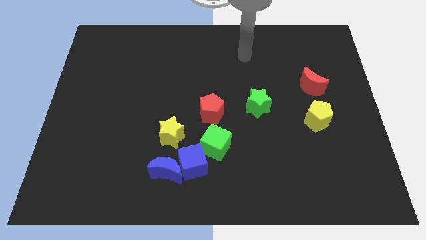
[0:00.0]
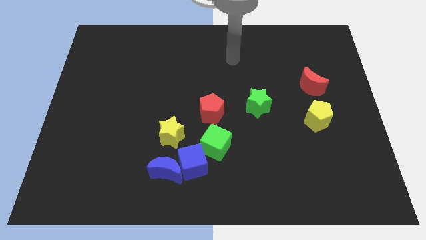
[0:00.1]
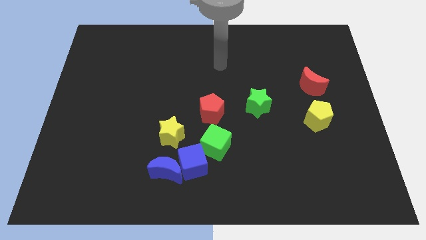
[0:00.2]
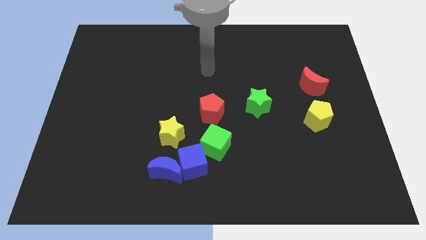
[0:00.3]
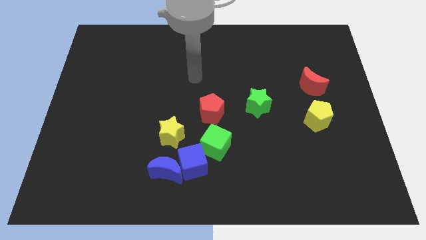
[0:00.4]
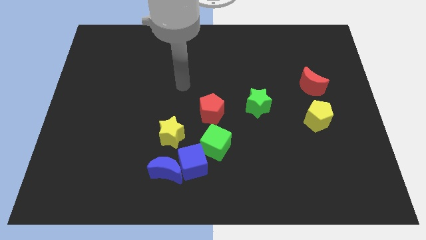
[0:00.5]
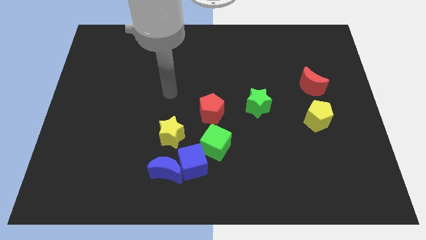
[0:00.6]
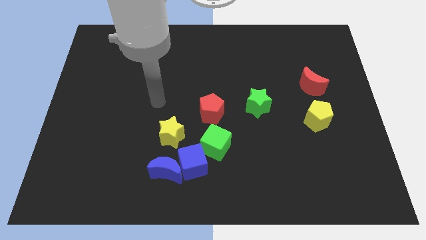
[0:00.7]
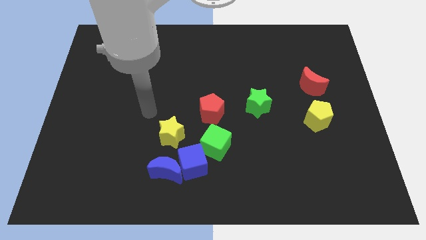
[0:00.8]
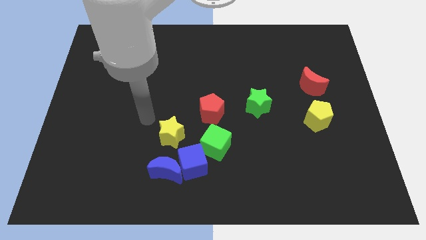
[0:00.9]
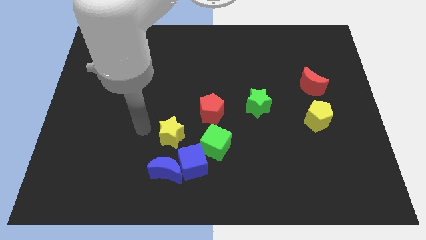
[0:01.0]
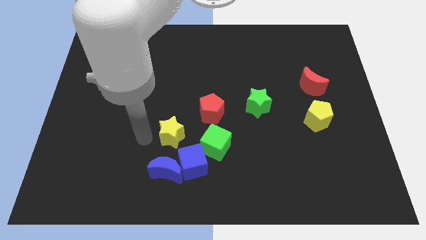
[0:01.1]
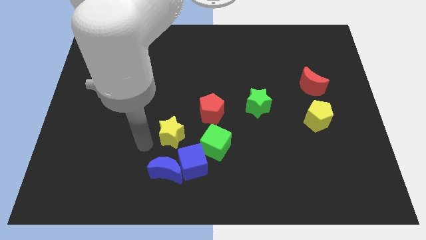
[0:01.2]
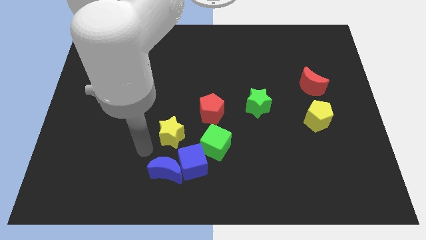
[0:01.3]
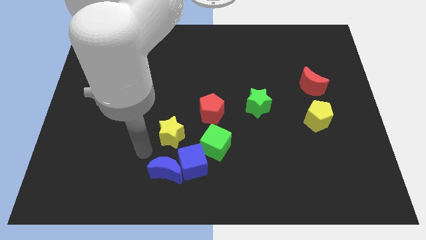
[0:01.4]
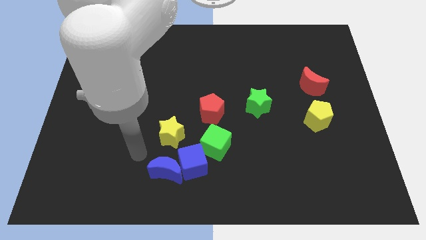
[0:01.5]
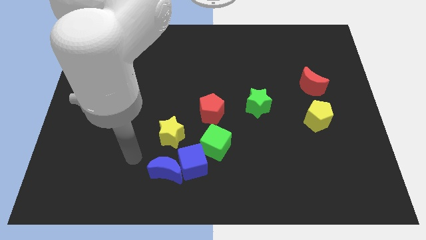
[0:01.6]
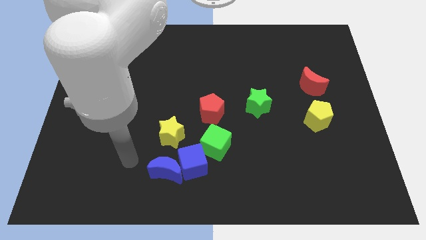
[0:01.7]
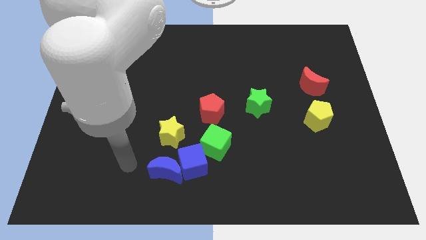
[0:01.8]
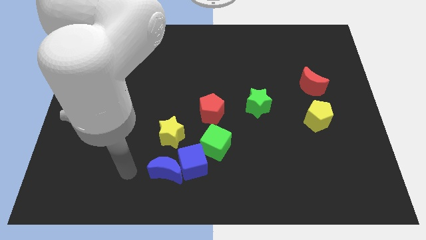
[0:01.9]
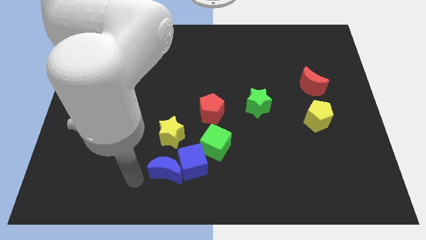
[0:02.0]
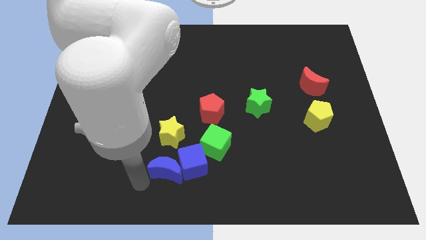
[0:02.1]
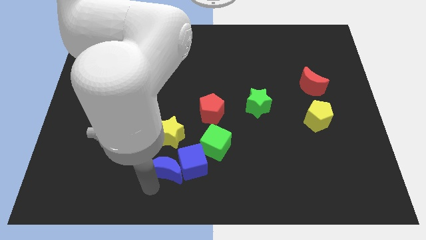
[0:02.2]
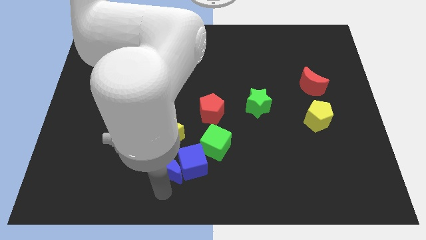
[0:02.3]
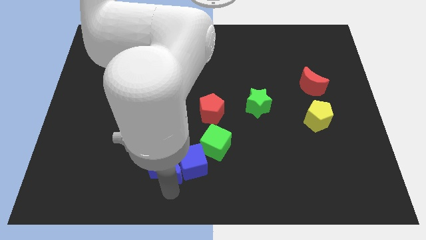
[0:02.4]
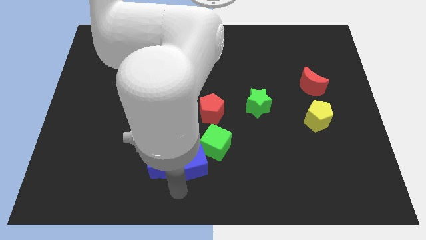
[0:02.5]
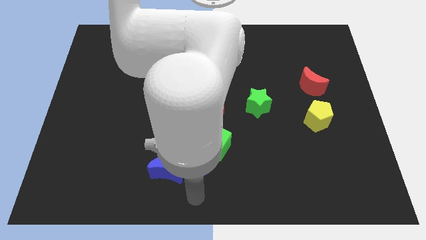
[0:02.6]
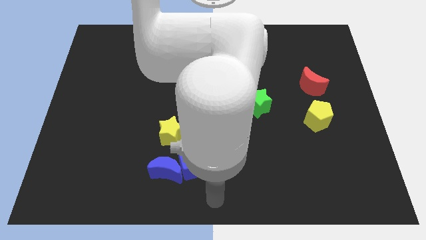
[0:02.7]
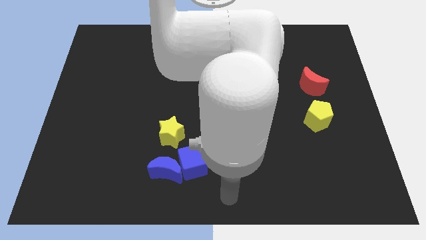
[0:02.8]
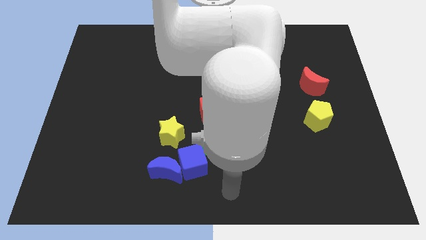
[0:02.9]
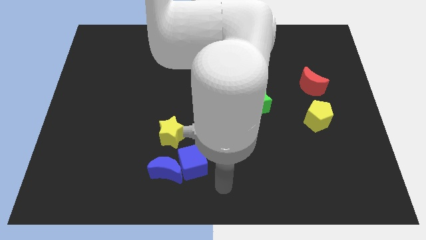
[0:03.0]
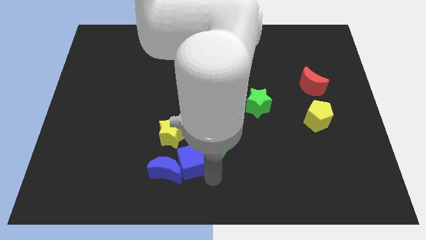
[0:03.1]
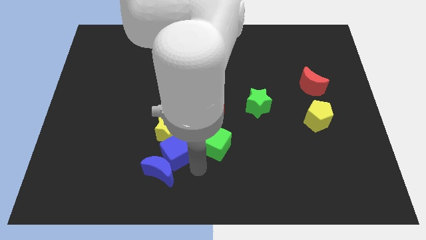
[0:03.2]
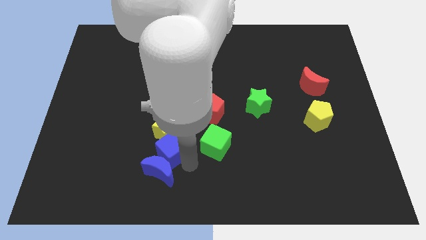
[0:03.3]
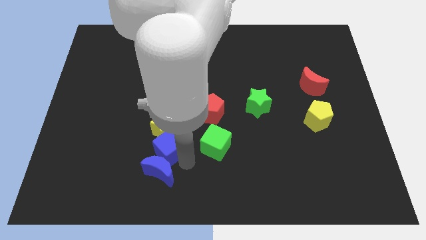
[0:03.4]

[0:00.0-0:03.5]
push the blue cube slightly upside to the board

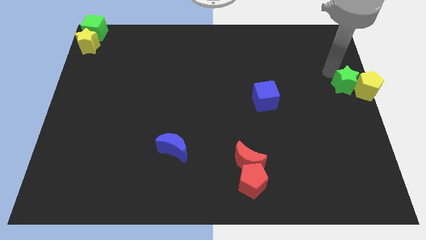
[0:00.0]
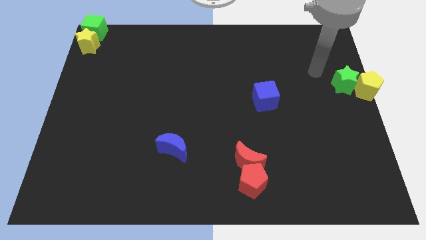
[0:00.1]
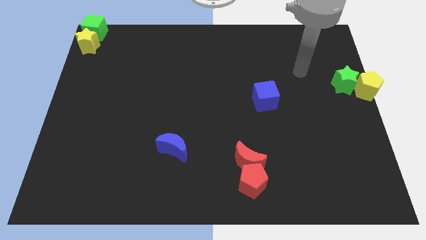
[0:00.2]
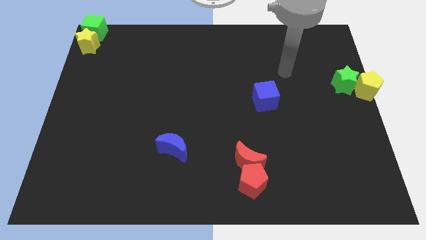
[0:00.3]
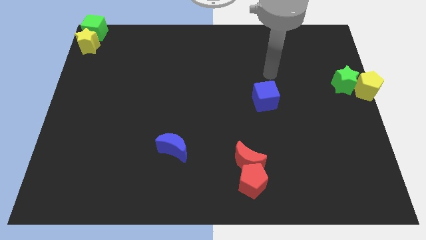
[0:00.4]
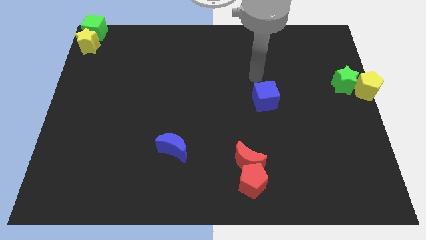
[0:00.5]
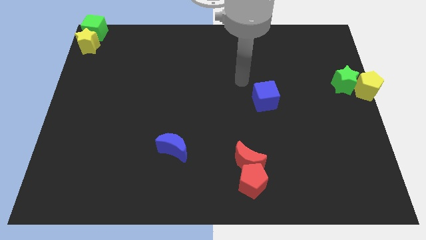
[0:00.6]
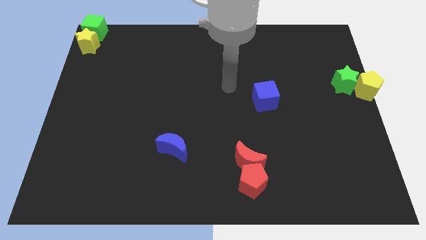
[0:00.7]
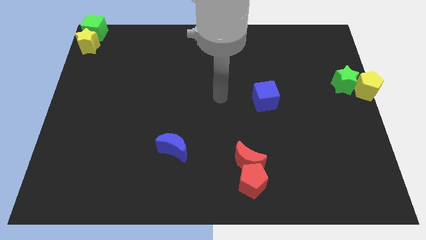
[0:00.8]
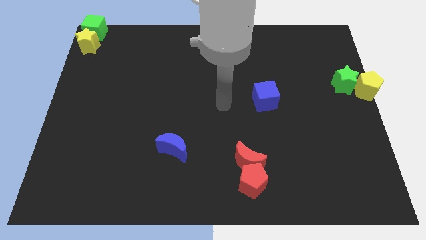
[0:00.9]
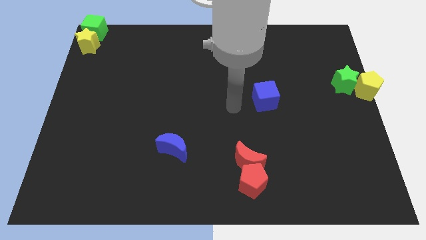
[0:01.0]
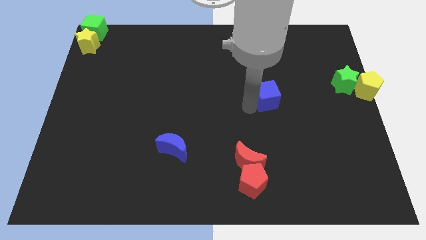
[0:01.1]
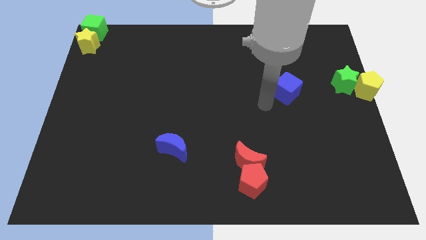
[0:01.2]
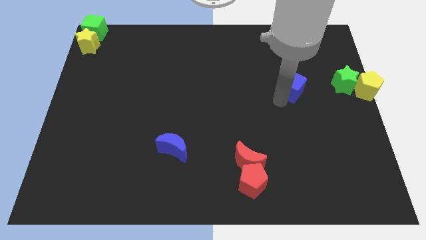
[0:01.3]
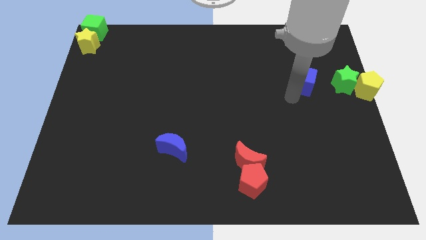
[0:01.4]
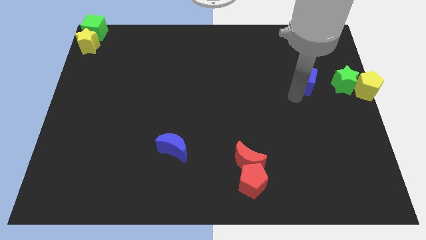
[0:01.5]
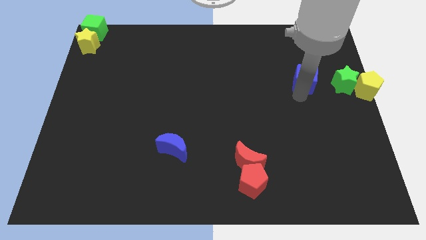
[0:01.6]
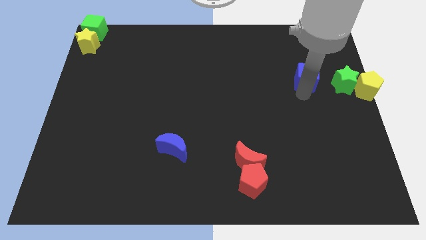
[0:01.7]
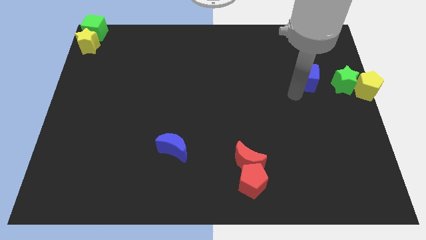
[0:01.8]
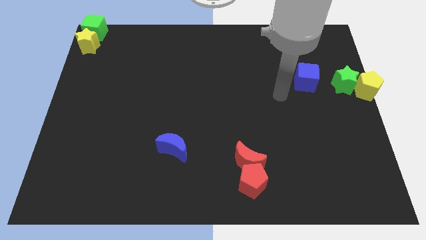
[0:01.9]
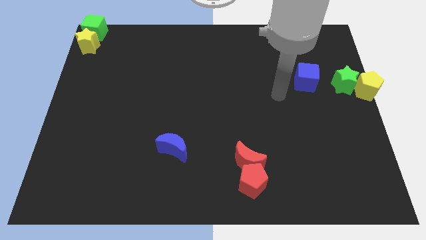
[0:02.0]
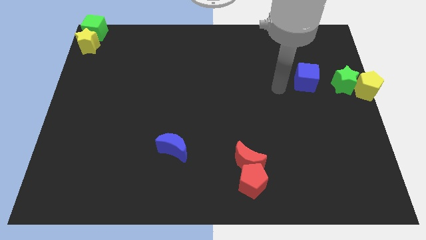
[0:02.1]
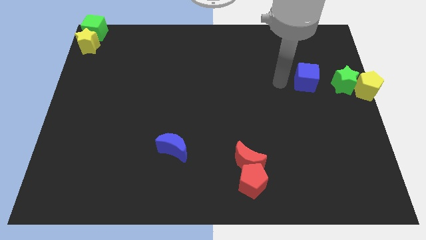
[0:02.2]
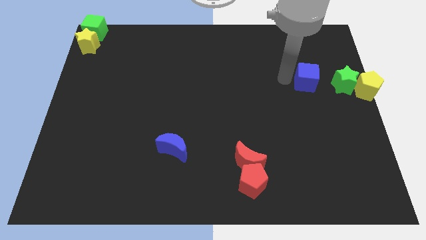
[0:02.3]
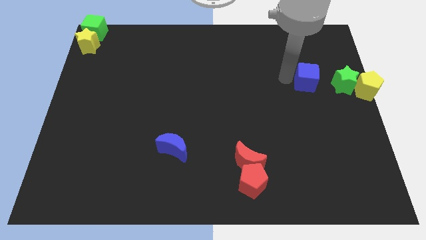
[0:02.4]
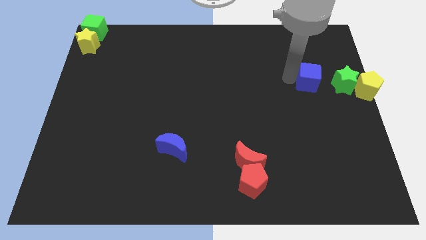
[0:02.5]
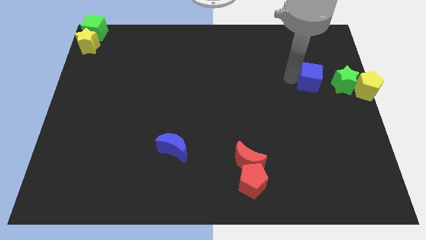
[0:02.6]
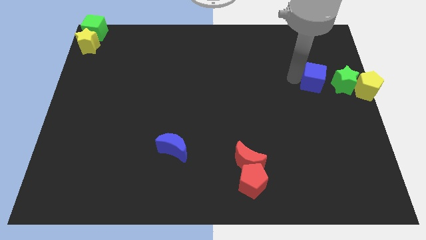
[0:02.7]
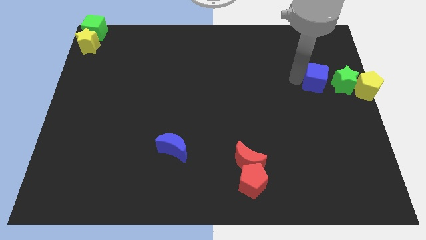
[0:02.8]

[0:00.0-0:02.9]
place the blue cube to the left side of green star

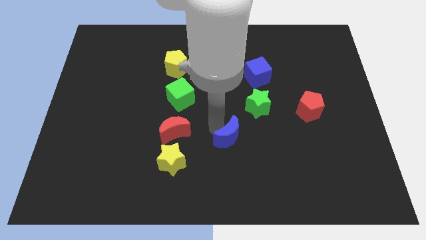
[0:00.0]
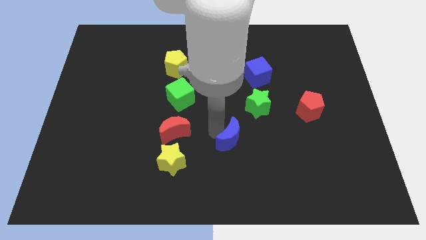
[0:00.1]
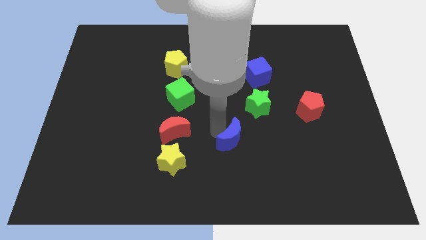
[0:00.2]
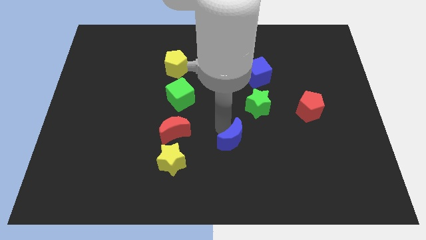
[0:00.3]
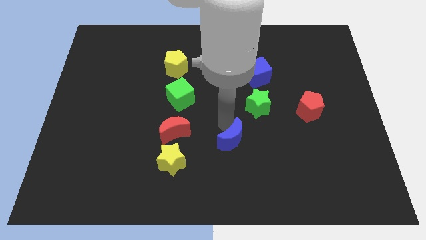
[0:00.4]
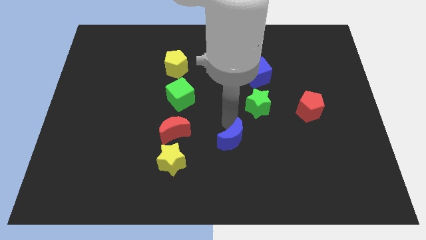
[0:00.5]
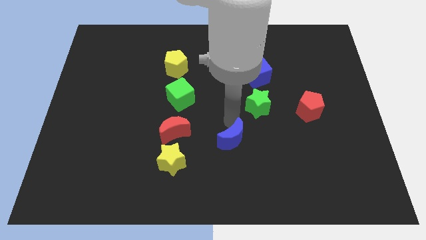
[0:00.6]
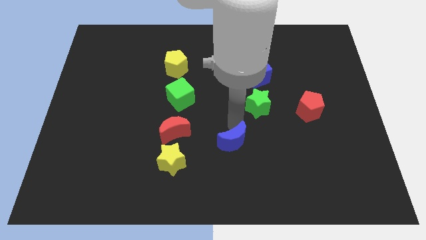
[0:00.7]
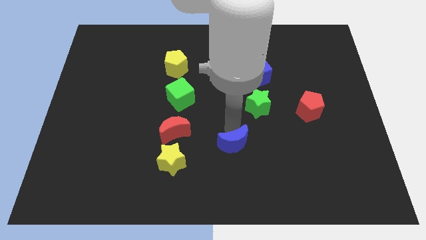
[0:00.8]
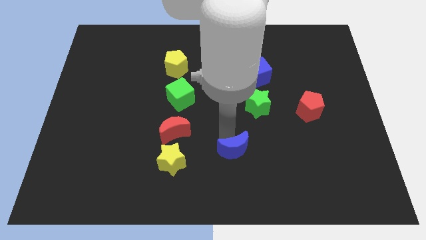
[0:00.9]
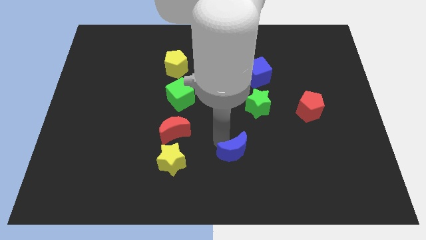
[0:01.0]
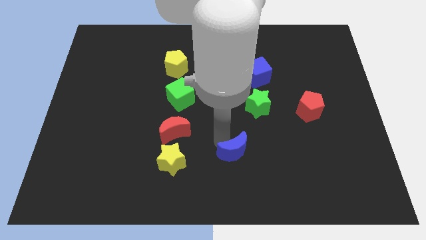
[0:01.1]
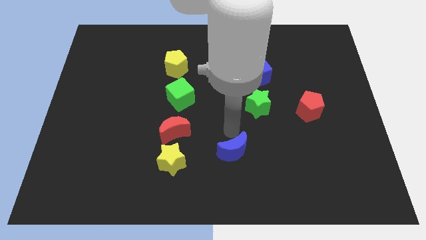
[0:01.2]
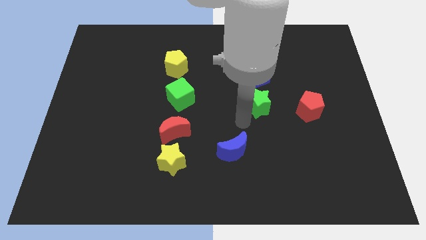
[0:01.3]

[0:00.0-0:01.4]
place blue moon to the right of yellow star

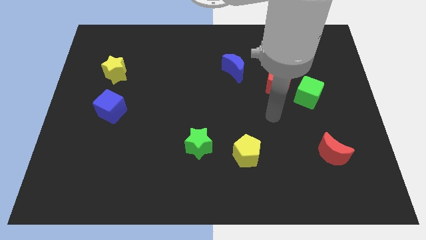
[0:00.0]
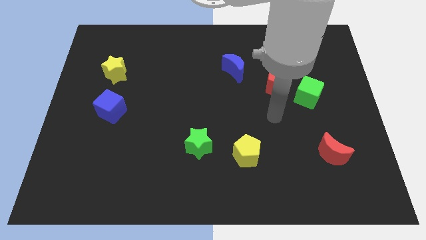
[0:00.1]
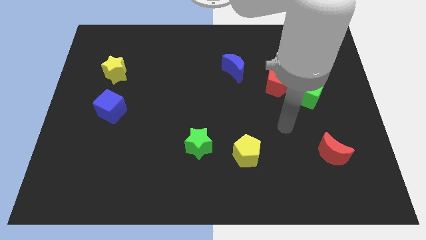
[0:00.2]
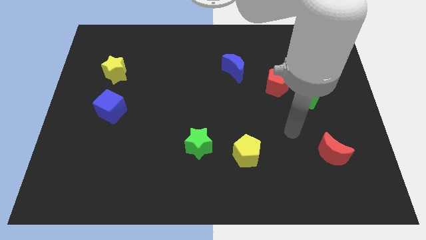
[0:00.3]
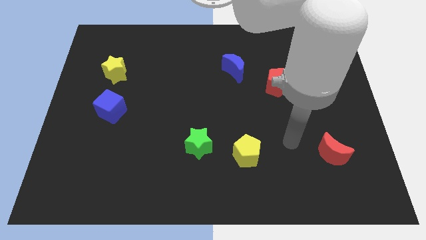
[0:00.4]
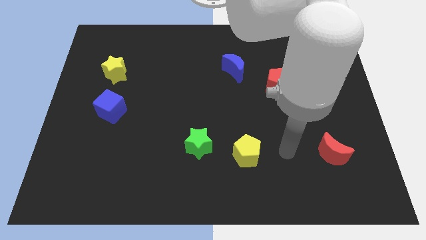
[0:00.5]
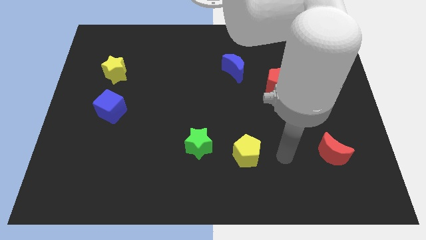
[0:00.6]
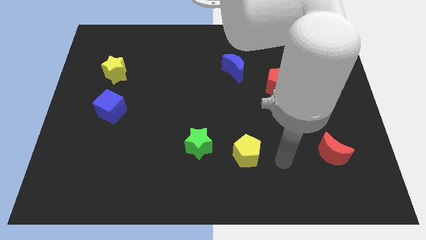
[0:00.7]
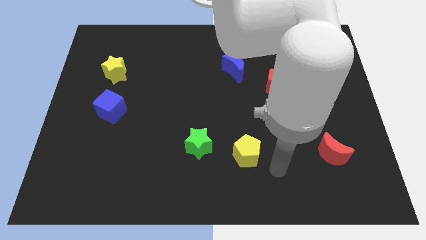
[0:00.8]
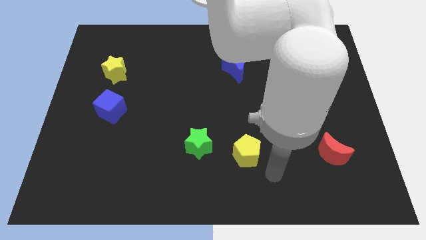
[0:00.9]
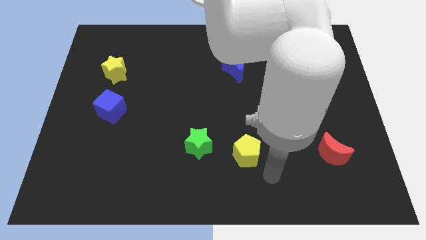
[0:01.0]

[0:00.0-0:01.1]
move your arm to the bottom right of the yellow pentagon
